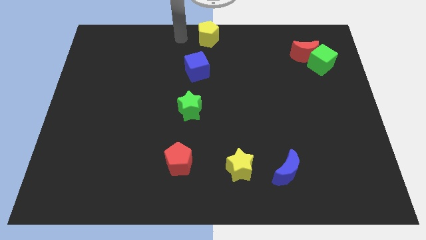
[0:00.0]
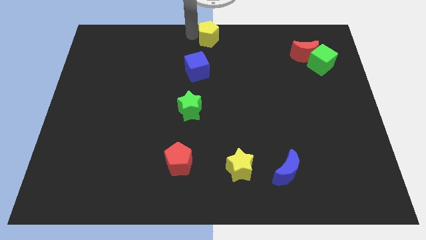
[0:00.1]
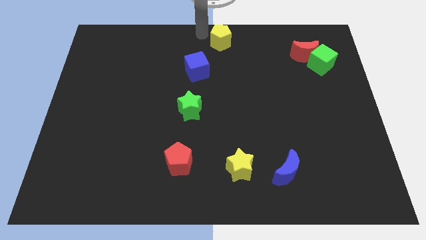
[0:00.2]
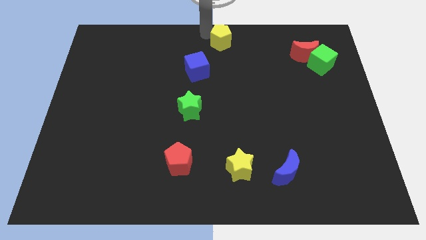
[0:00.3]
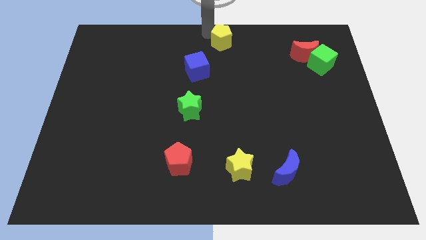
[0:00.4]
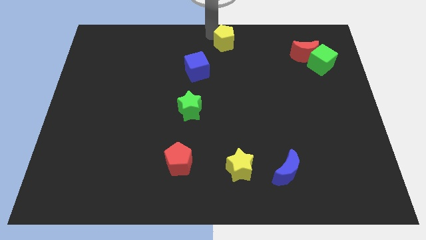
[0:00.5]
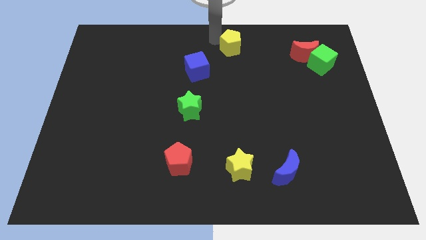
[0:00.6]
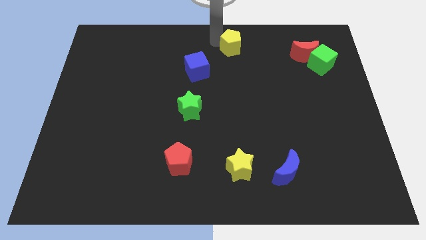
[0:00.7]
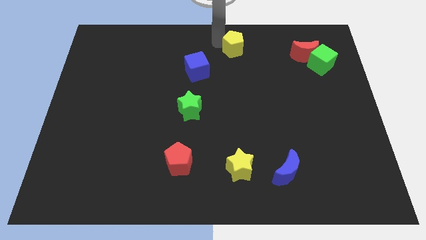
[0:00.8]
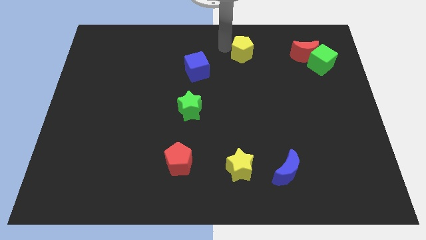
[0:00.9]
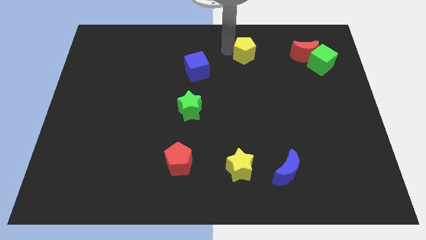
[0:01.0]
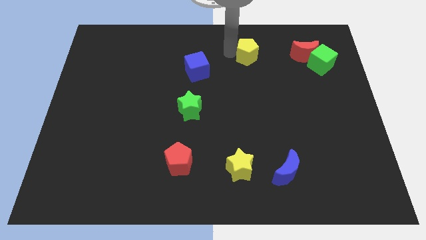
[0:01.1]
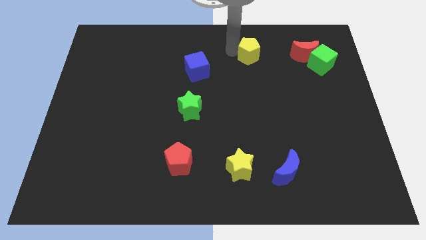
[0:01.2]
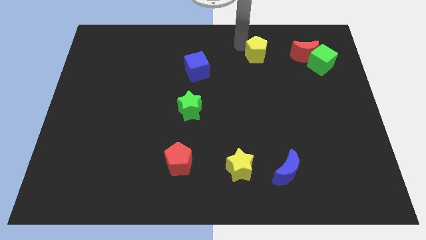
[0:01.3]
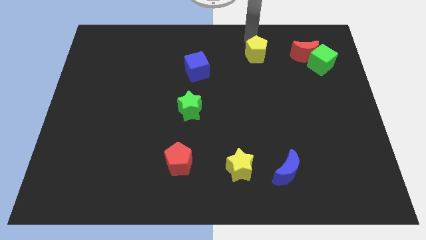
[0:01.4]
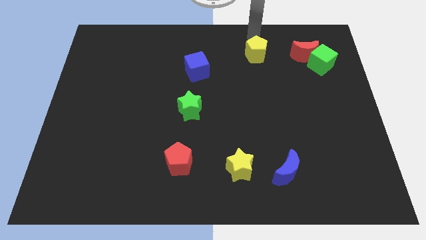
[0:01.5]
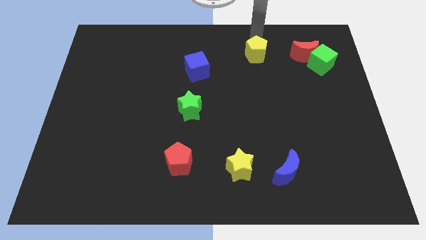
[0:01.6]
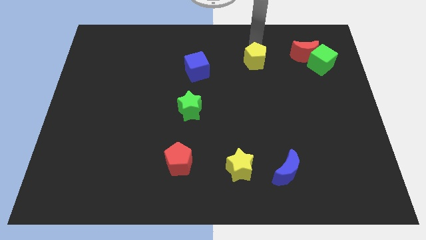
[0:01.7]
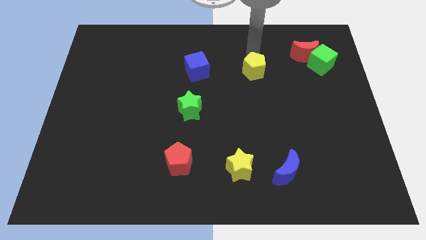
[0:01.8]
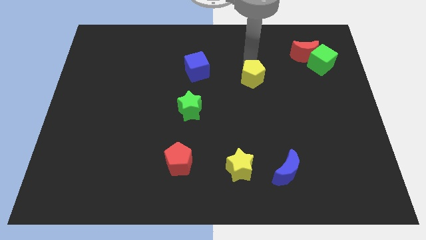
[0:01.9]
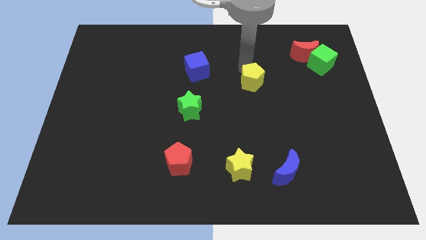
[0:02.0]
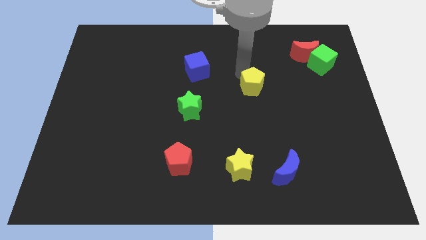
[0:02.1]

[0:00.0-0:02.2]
move the yellow pentagon in between green star and red moon

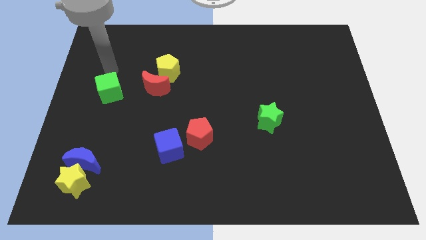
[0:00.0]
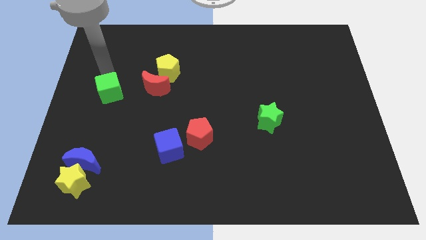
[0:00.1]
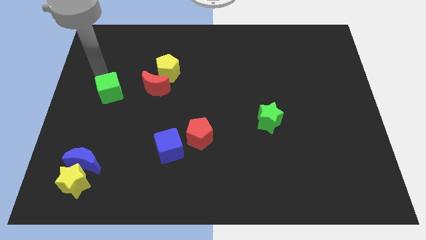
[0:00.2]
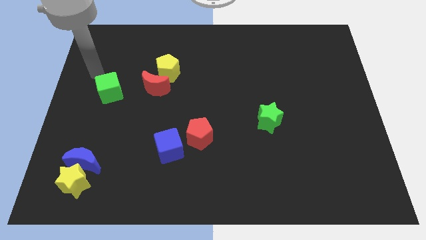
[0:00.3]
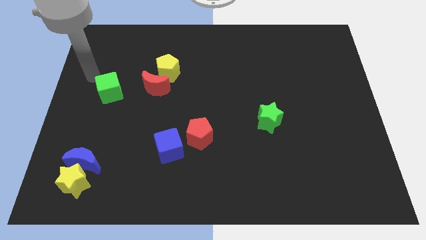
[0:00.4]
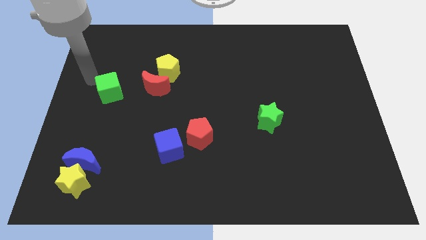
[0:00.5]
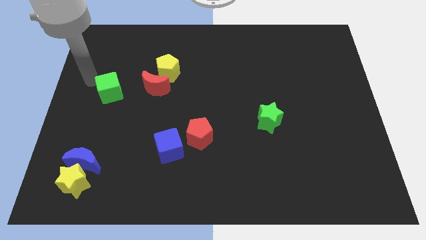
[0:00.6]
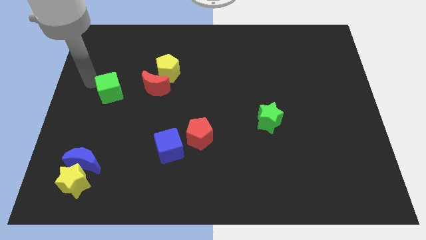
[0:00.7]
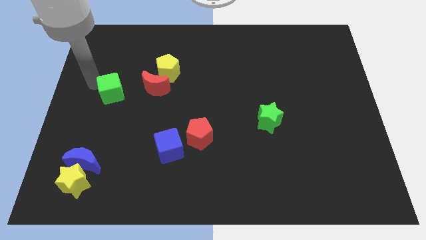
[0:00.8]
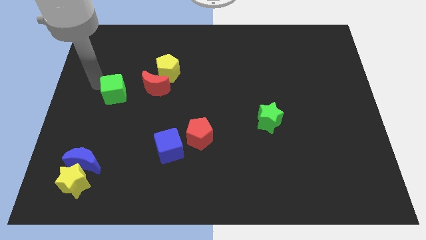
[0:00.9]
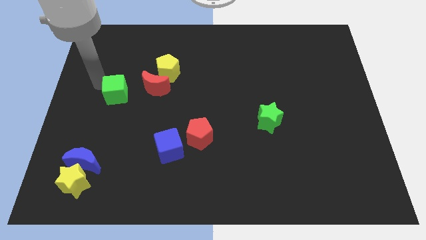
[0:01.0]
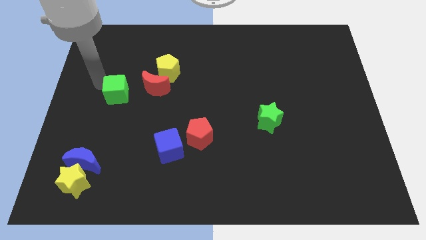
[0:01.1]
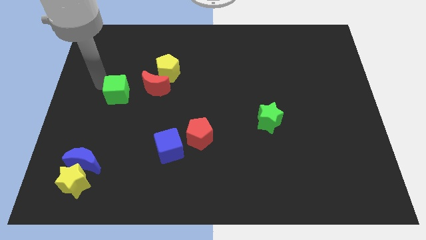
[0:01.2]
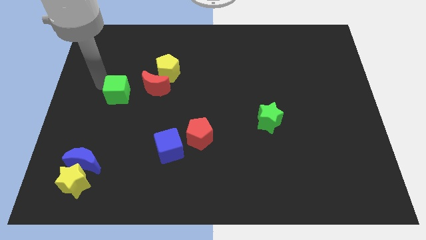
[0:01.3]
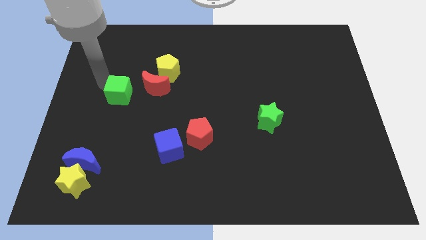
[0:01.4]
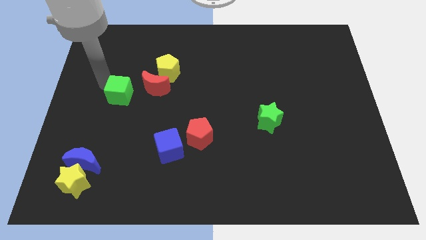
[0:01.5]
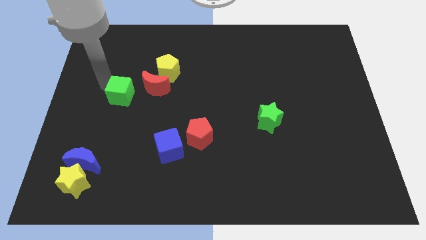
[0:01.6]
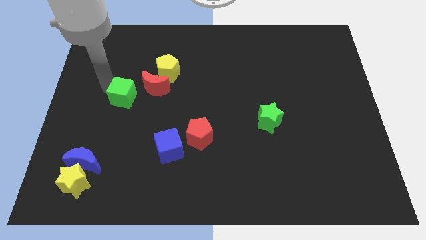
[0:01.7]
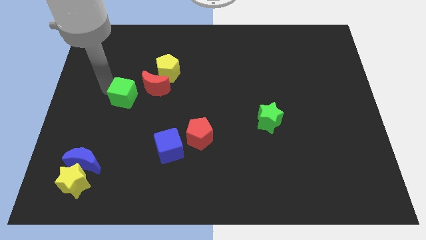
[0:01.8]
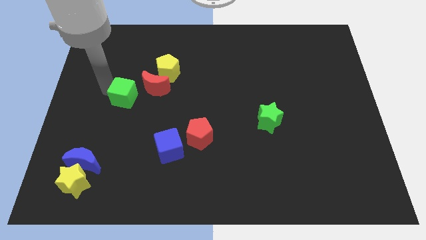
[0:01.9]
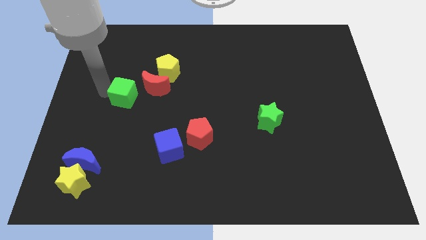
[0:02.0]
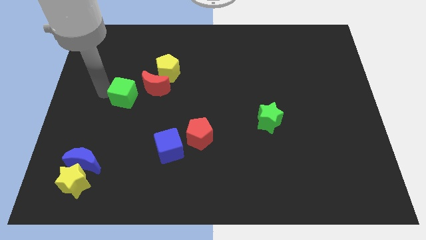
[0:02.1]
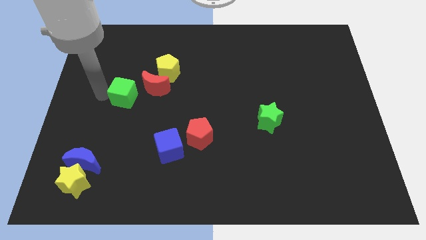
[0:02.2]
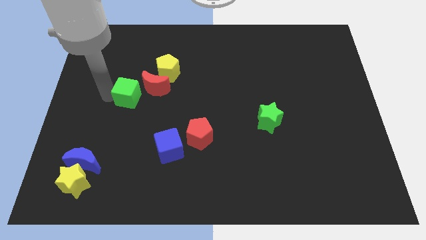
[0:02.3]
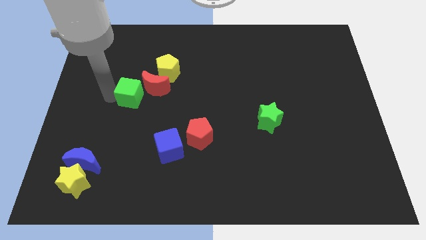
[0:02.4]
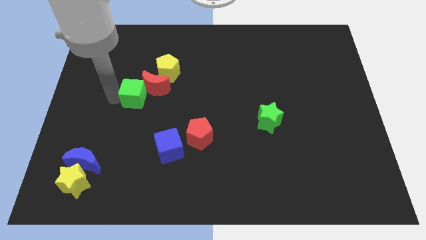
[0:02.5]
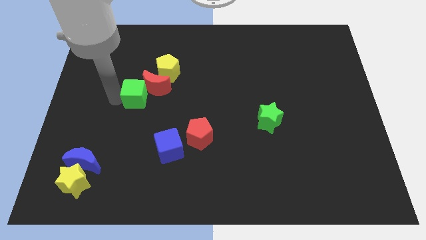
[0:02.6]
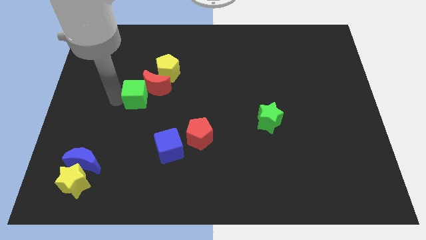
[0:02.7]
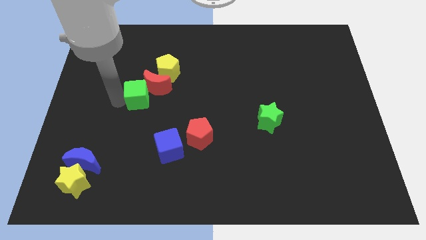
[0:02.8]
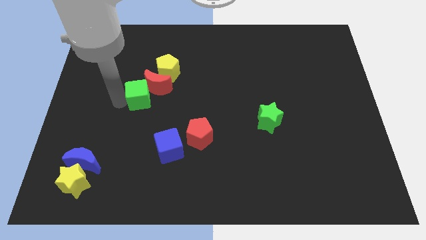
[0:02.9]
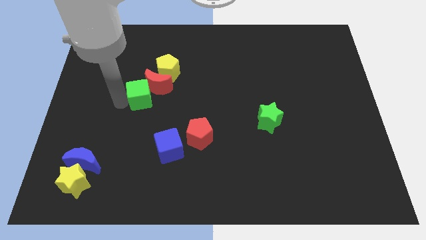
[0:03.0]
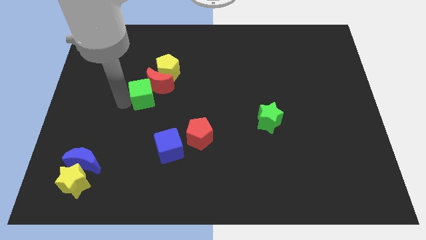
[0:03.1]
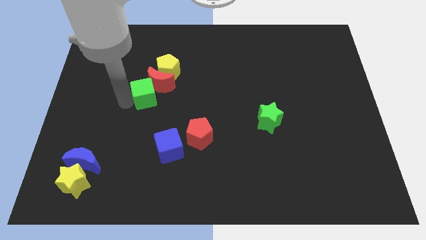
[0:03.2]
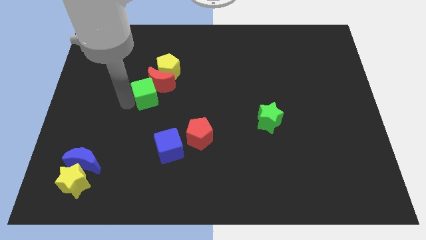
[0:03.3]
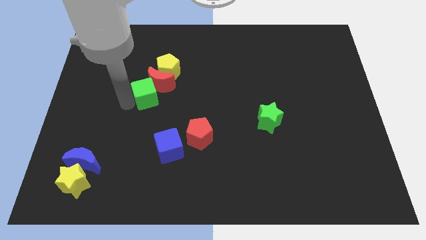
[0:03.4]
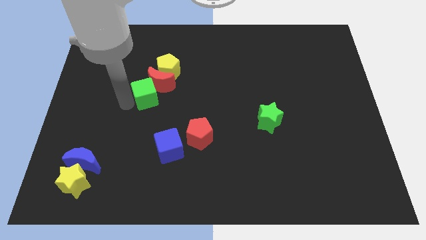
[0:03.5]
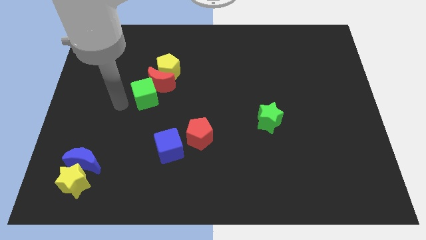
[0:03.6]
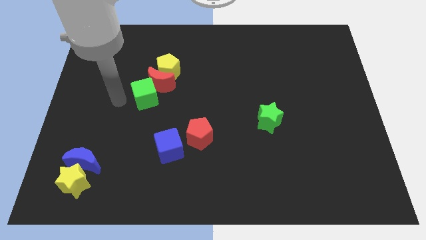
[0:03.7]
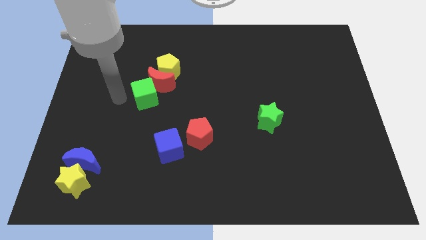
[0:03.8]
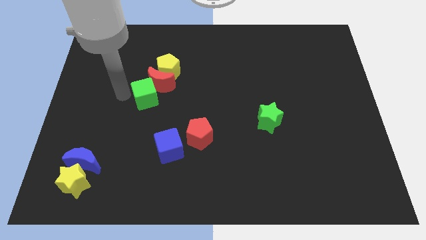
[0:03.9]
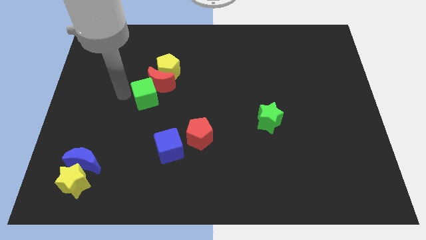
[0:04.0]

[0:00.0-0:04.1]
push the green cube into the red moon

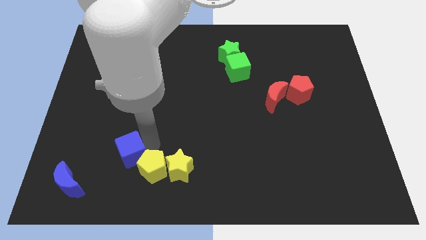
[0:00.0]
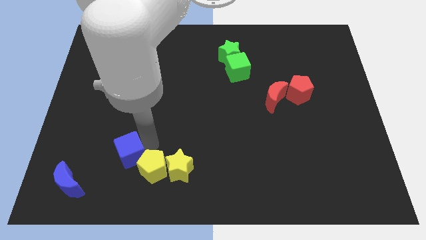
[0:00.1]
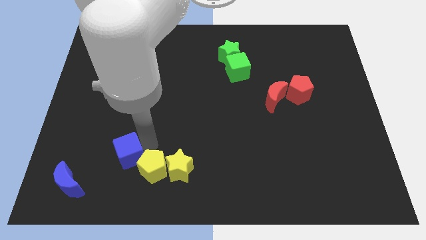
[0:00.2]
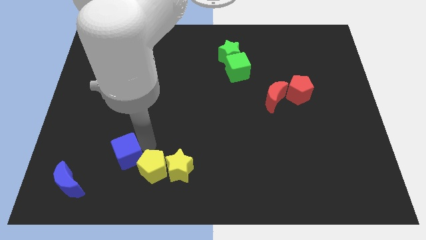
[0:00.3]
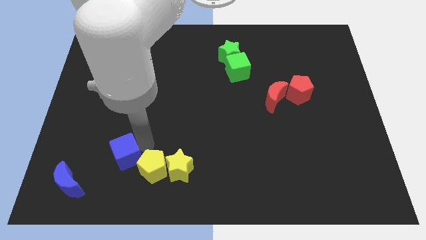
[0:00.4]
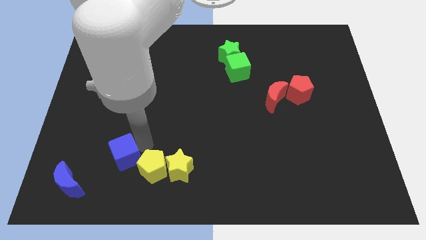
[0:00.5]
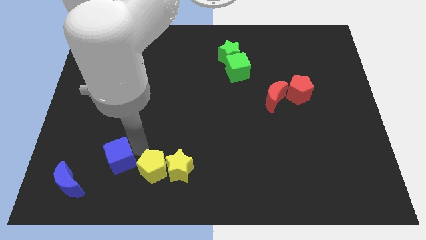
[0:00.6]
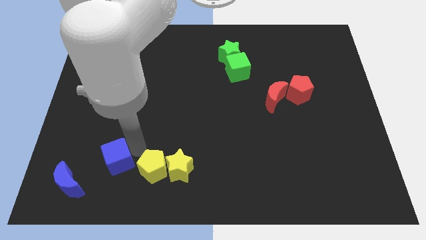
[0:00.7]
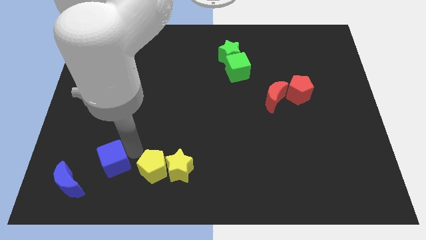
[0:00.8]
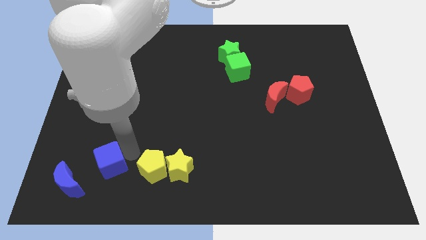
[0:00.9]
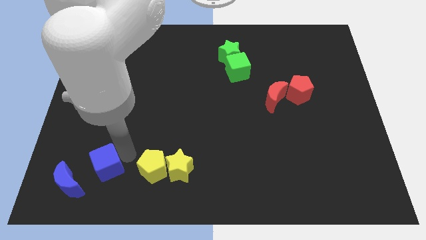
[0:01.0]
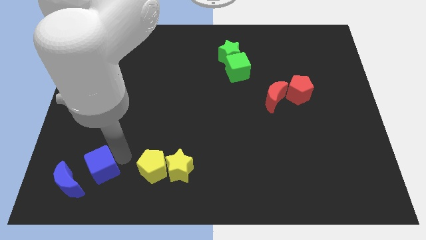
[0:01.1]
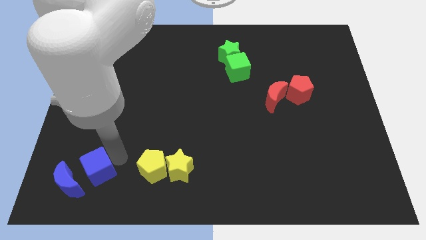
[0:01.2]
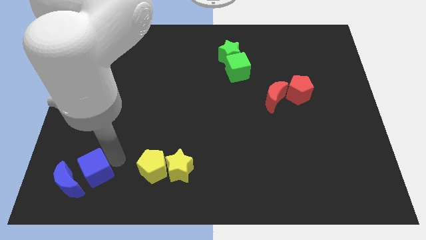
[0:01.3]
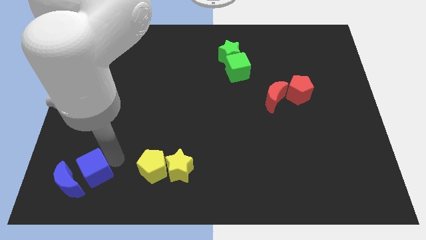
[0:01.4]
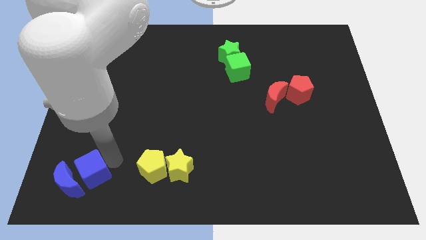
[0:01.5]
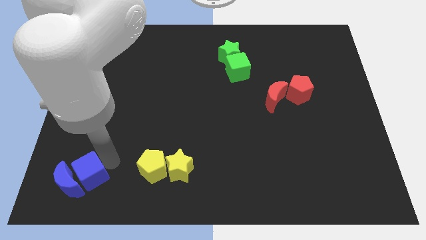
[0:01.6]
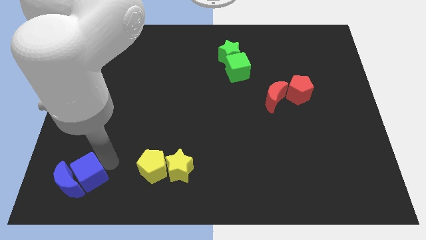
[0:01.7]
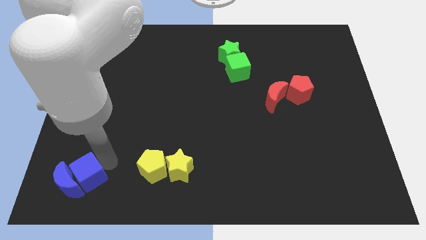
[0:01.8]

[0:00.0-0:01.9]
move the blue cube into the blue crescent

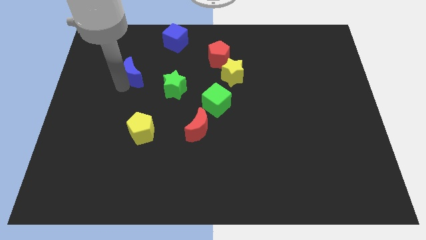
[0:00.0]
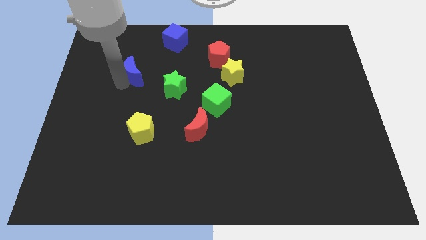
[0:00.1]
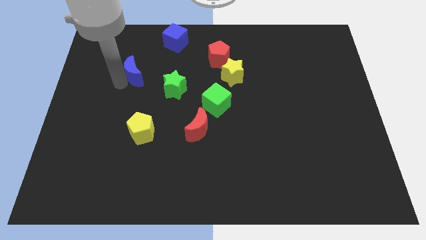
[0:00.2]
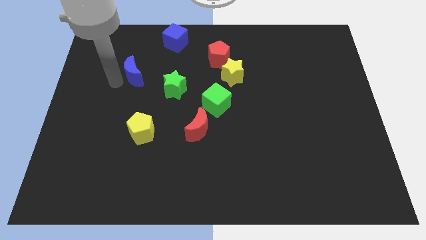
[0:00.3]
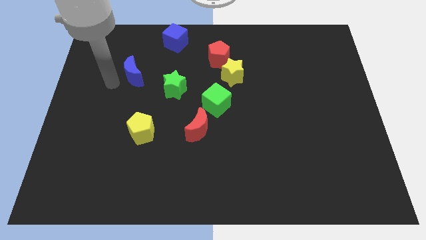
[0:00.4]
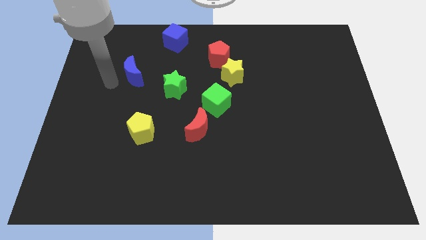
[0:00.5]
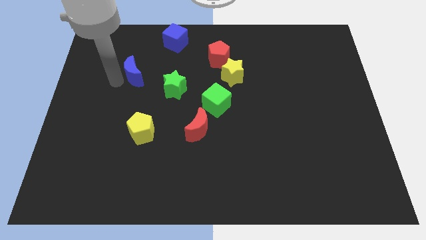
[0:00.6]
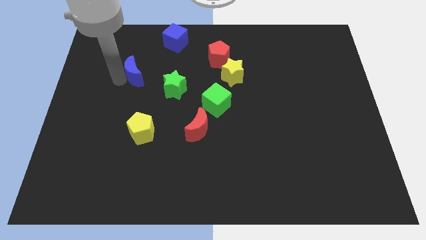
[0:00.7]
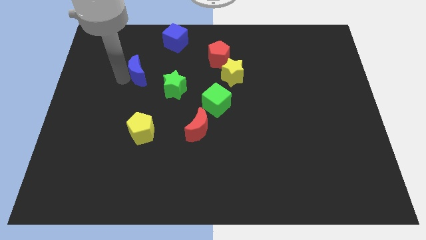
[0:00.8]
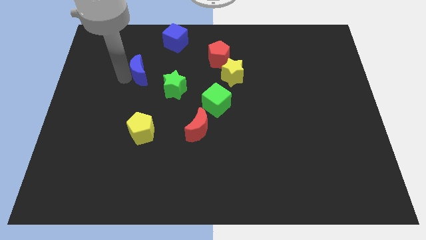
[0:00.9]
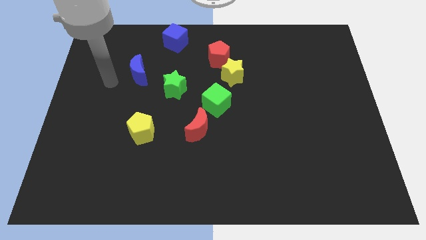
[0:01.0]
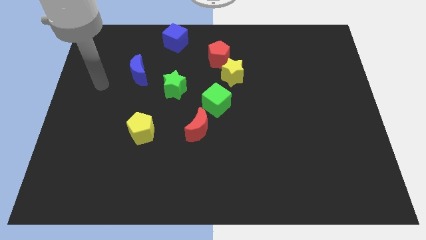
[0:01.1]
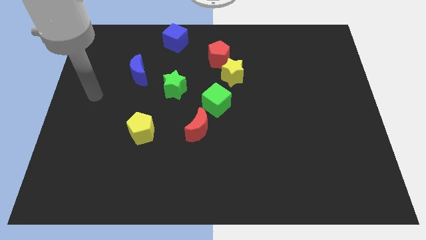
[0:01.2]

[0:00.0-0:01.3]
move the blue crescent to the right of the board
